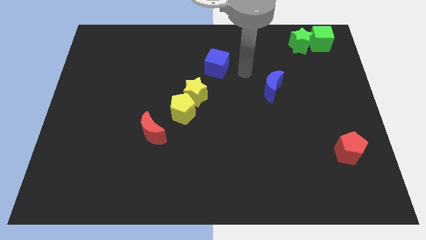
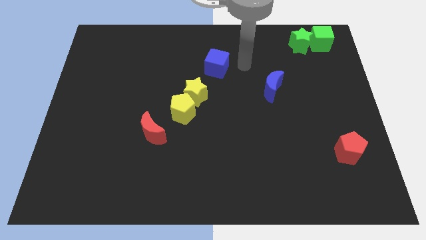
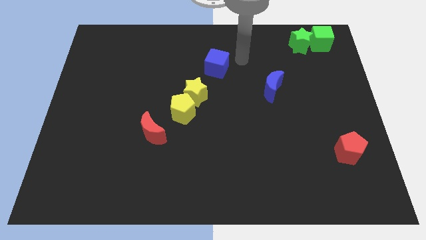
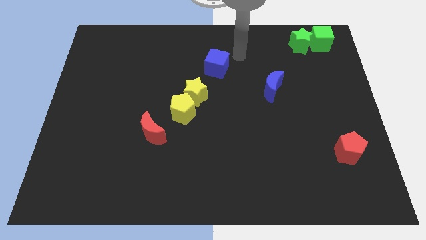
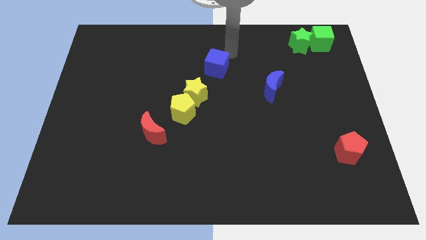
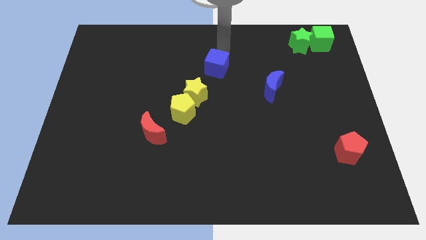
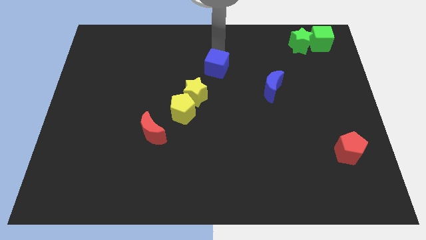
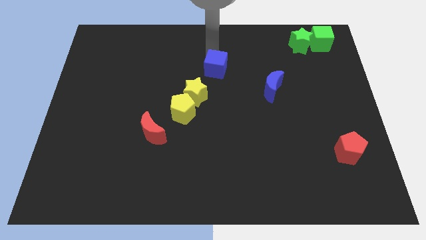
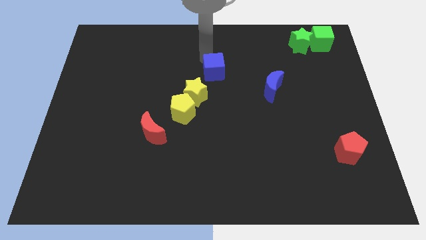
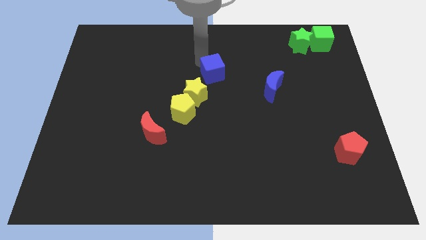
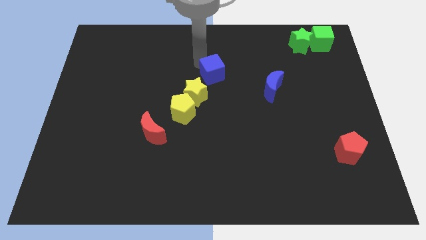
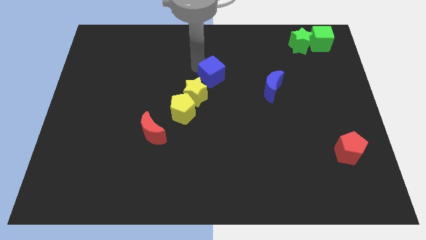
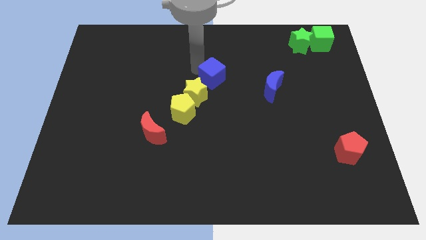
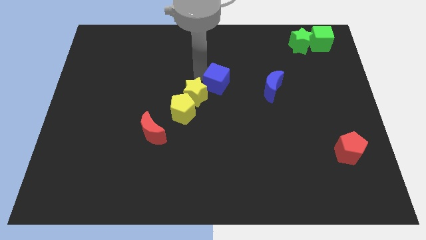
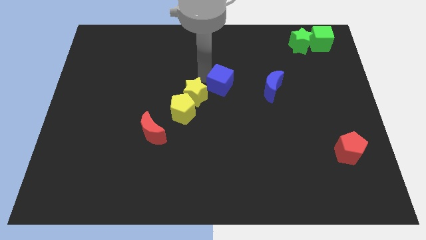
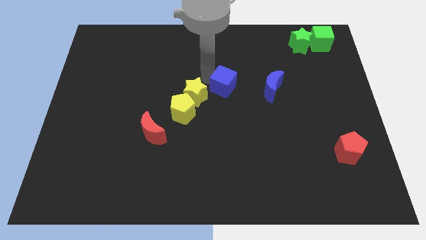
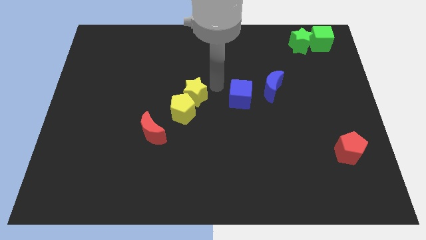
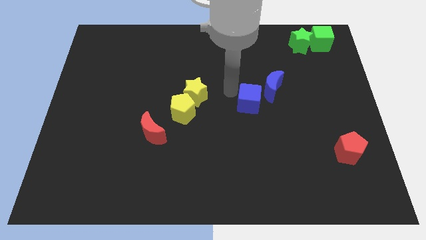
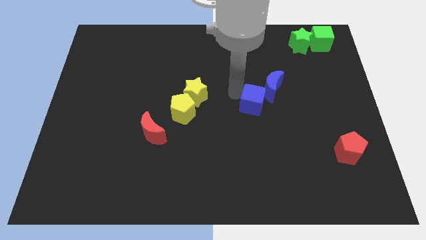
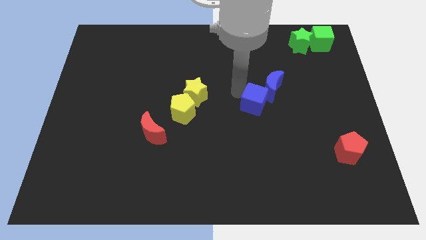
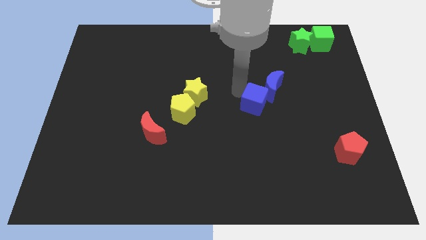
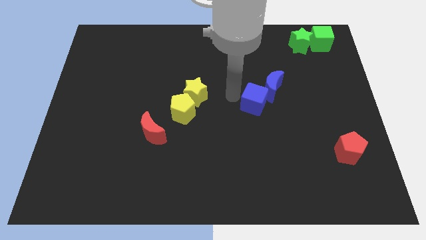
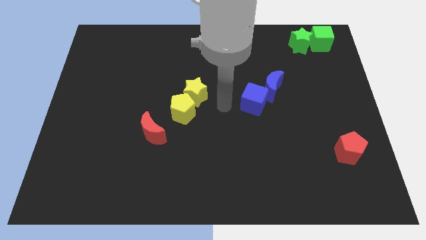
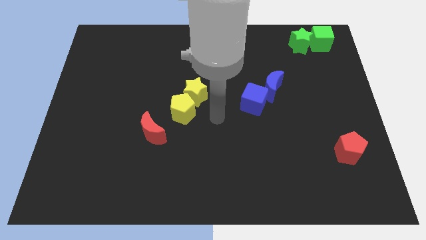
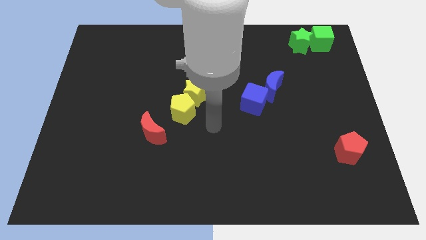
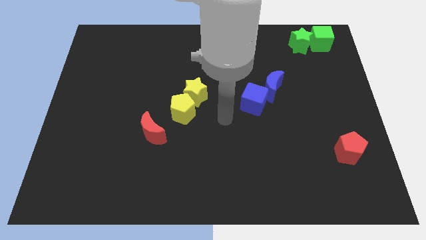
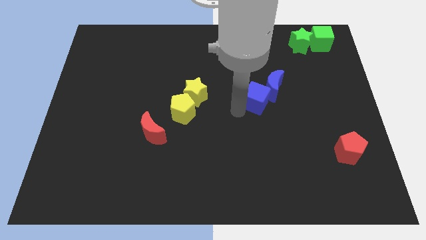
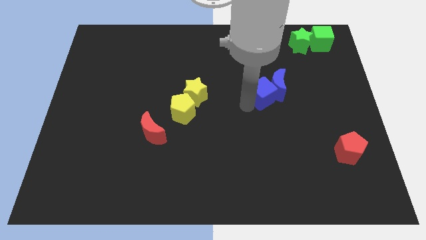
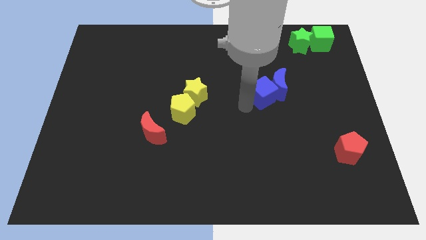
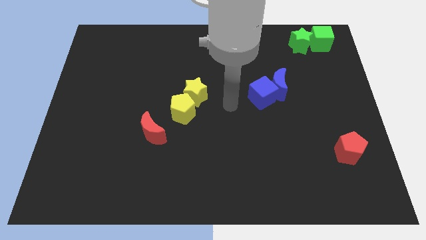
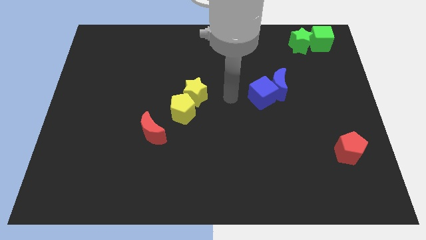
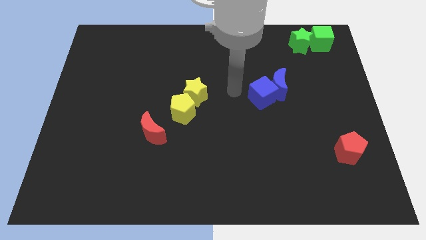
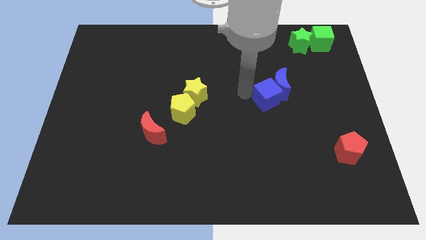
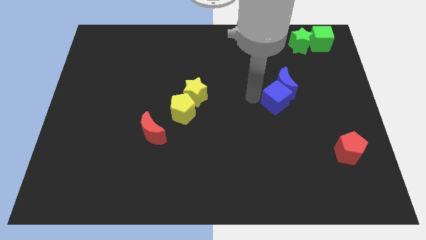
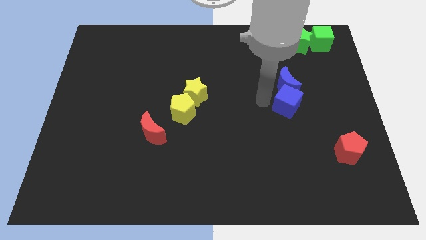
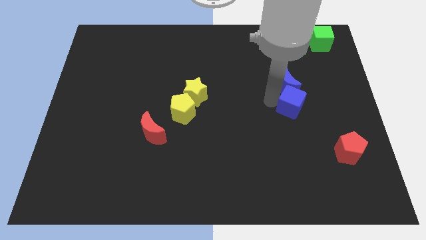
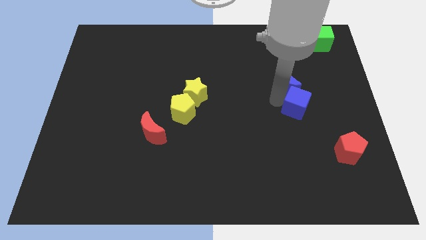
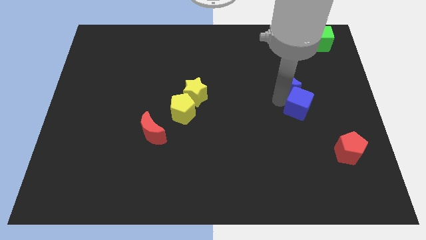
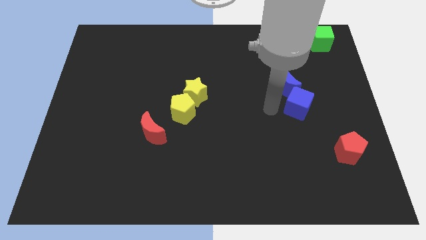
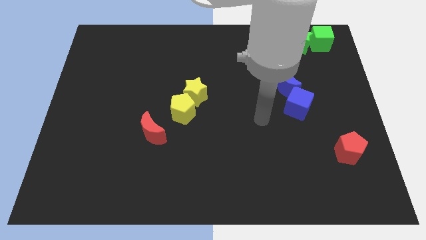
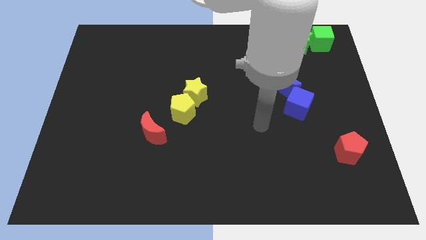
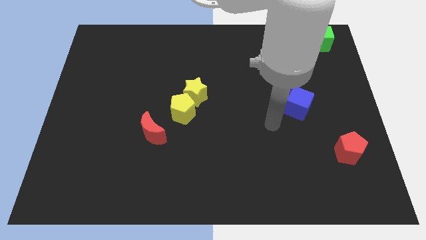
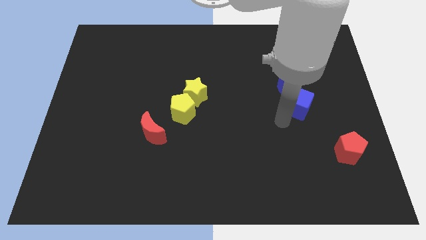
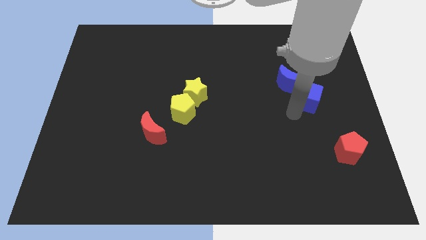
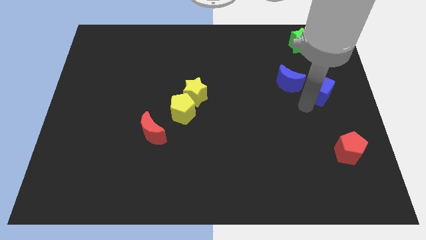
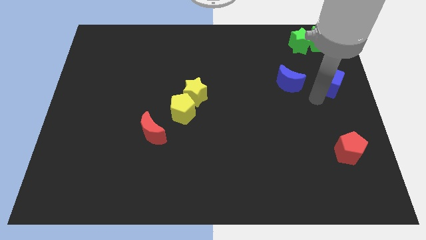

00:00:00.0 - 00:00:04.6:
push the blue cube towards the center right

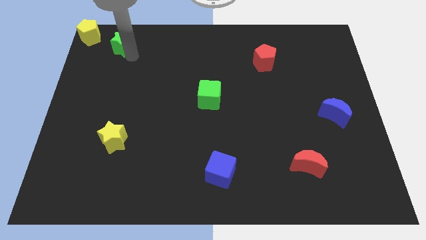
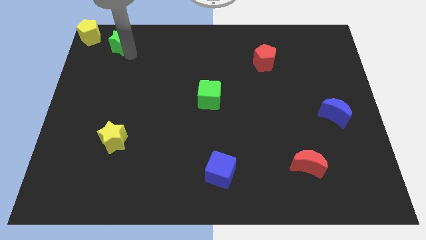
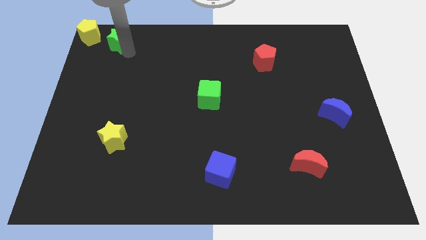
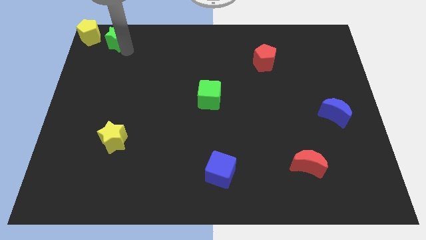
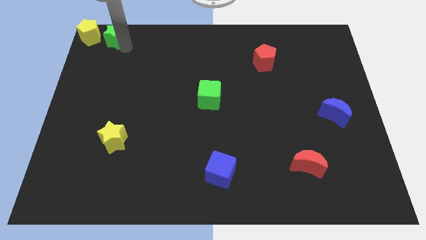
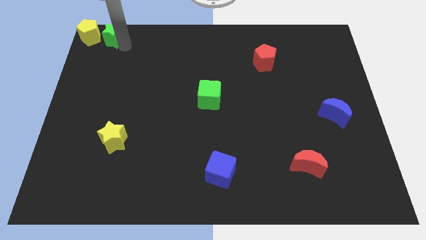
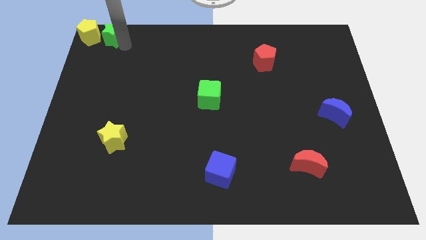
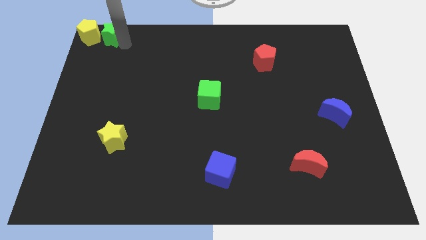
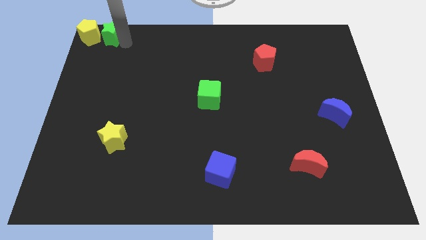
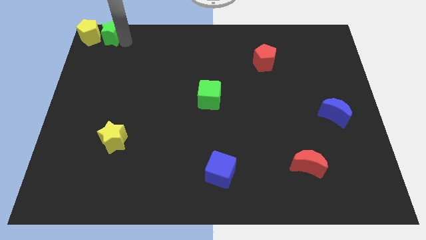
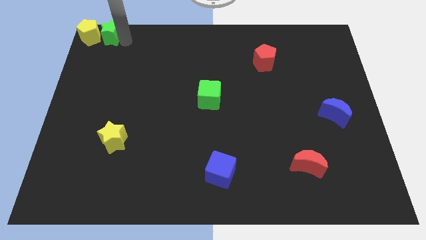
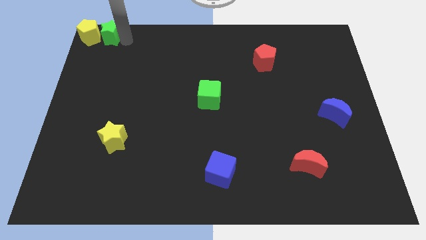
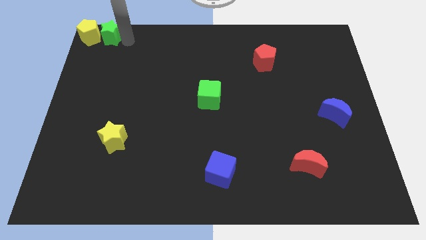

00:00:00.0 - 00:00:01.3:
place the green star to the right side of the yellow pentagon

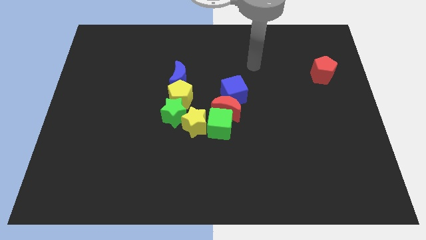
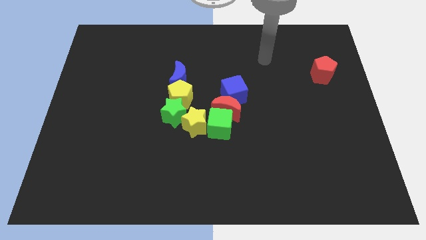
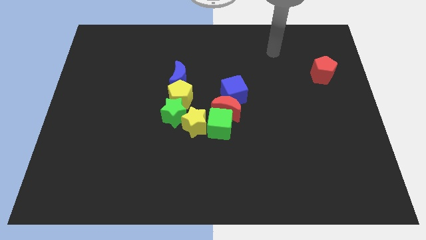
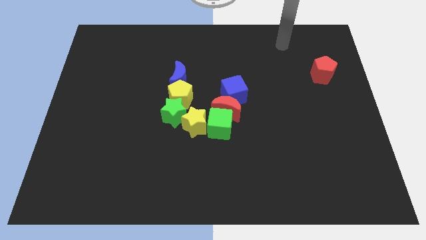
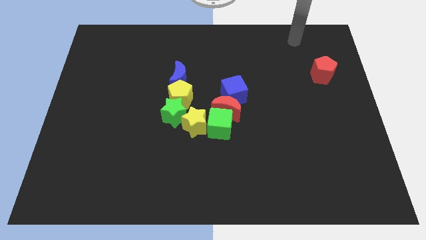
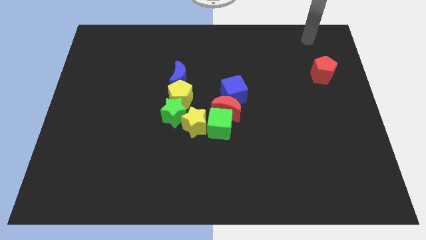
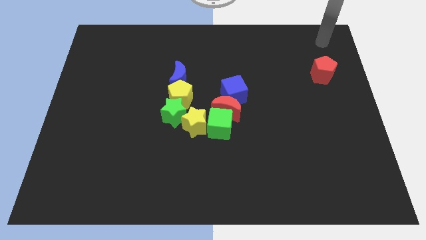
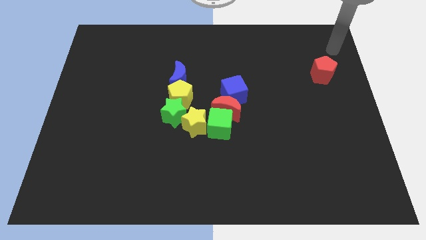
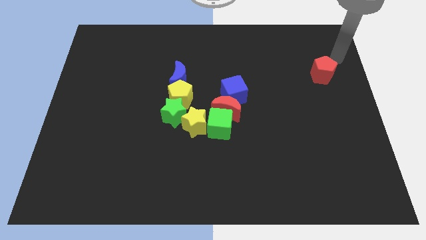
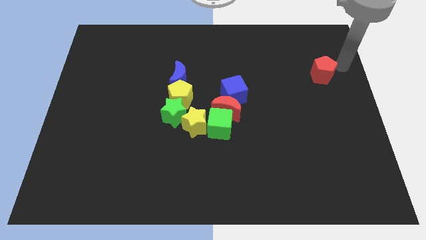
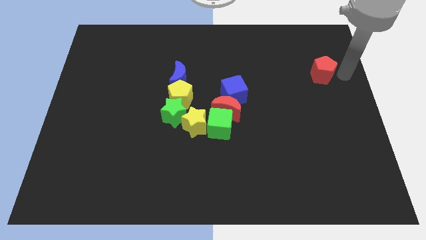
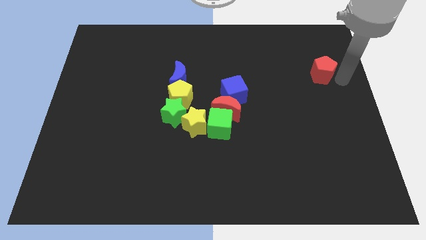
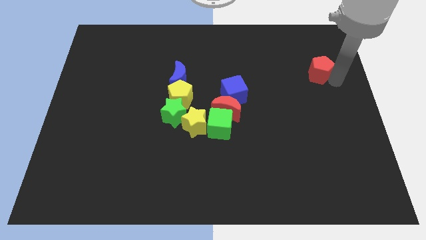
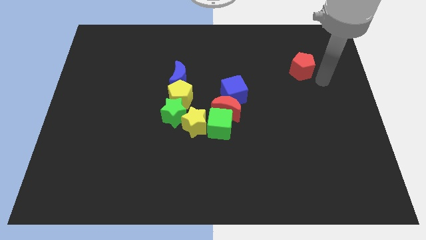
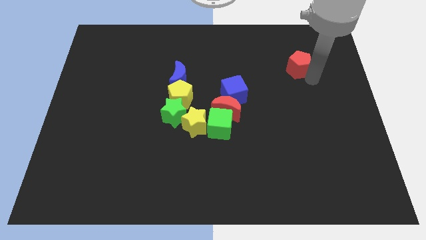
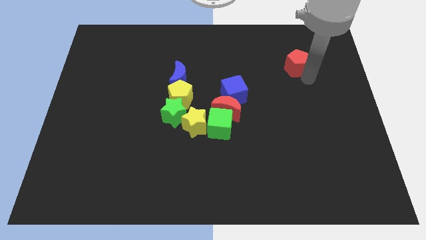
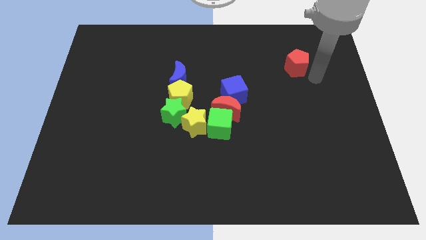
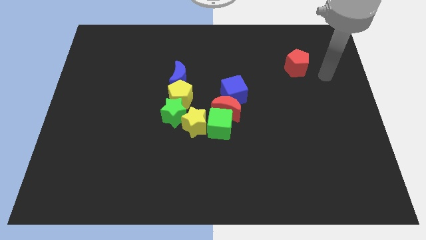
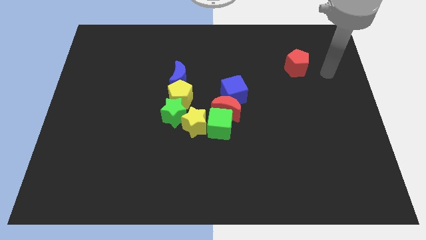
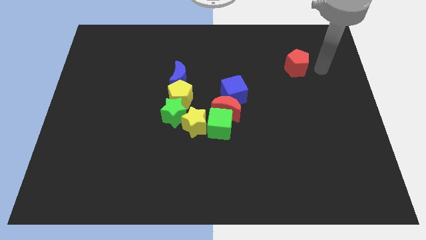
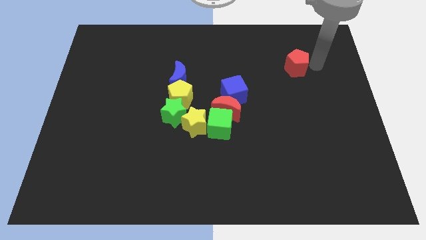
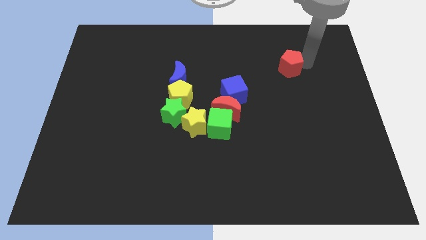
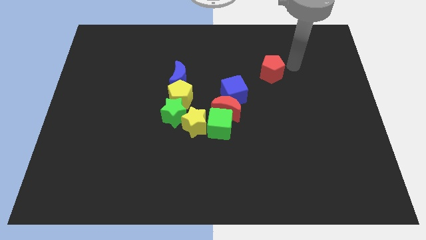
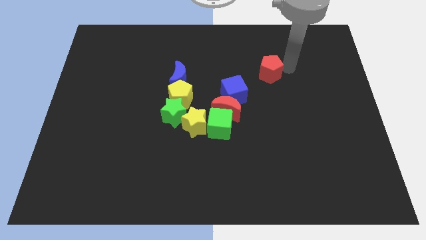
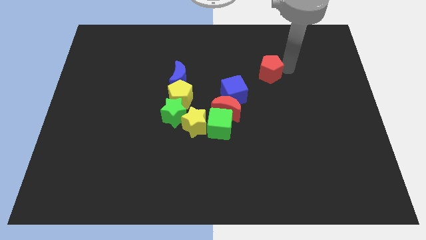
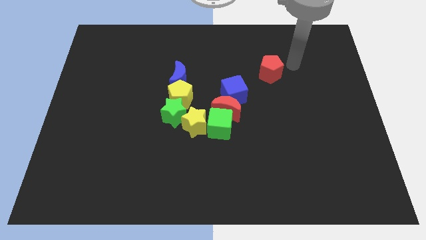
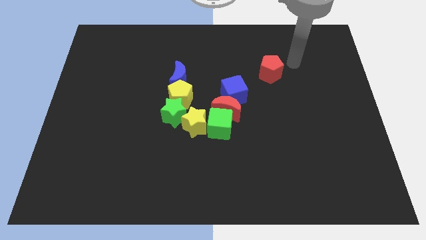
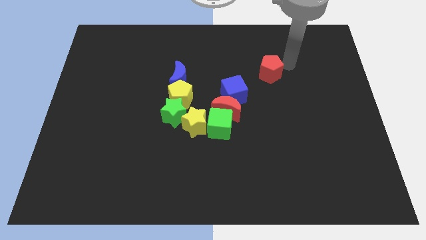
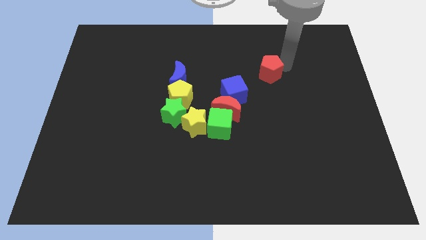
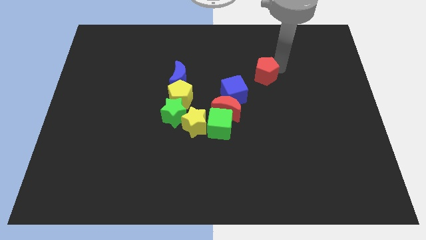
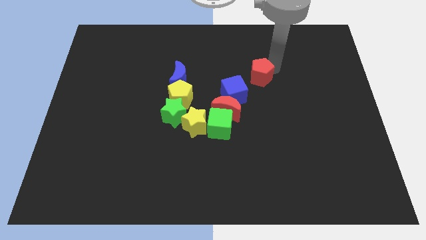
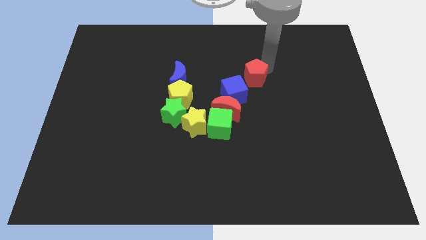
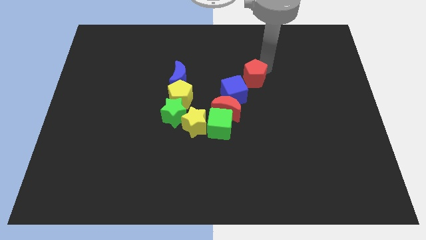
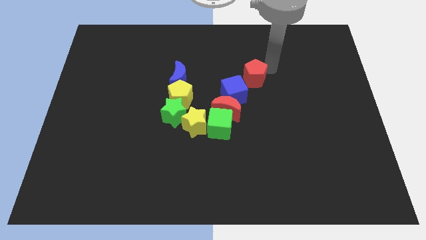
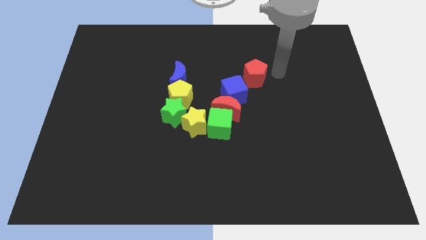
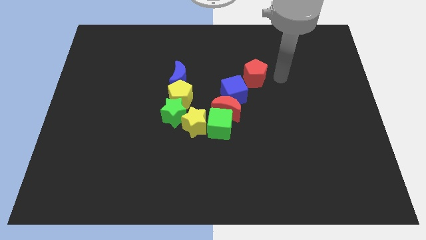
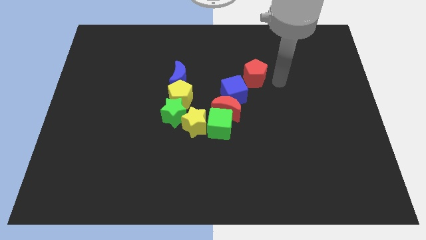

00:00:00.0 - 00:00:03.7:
move the red pentagon to the right of the blue cube
